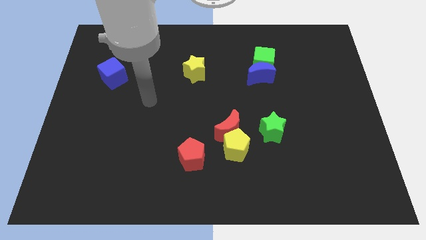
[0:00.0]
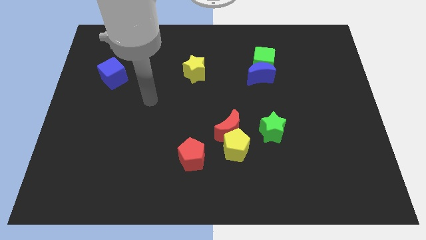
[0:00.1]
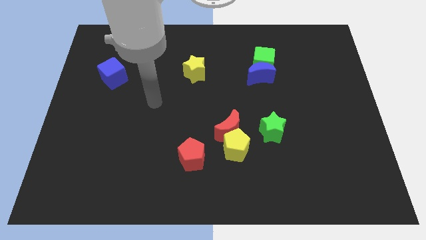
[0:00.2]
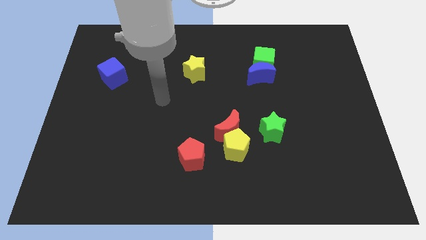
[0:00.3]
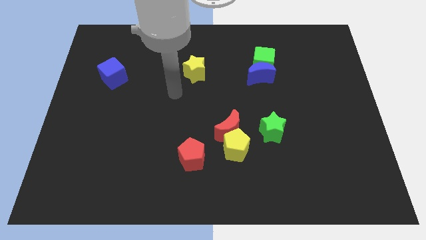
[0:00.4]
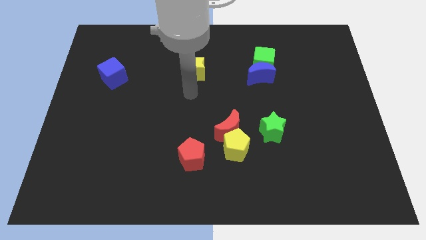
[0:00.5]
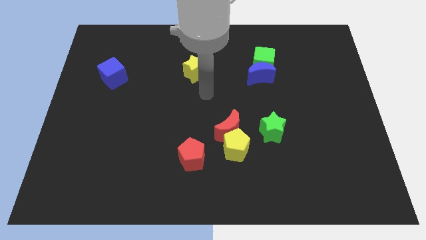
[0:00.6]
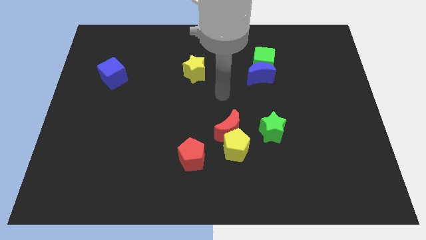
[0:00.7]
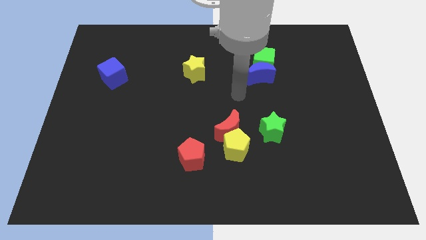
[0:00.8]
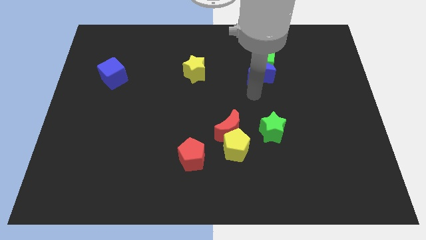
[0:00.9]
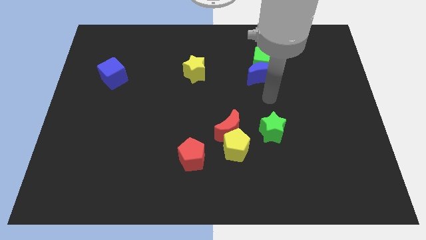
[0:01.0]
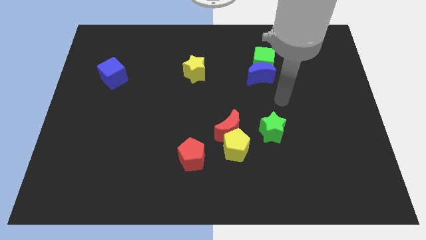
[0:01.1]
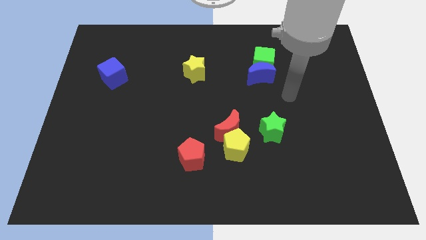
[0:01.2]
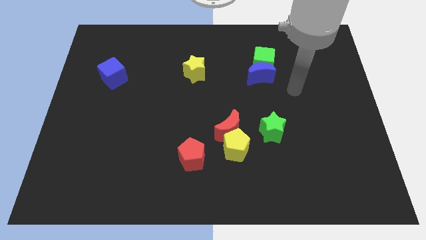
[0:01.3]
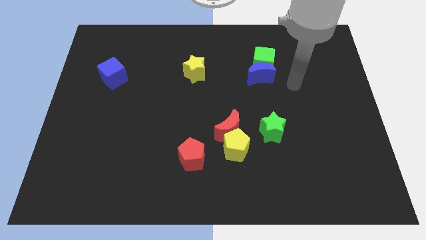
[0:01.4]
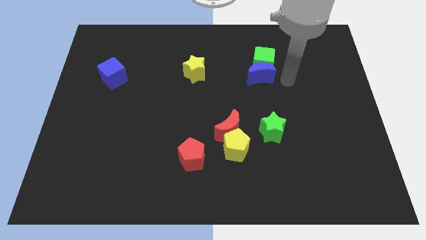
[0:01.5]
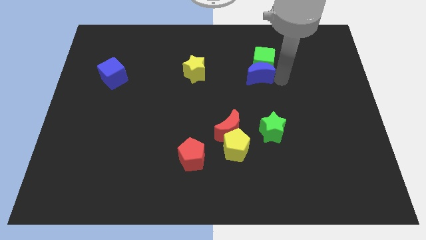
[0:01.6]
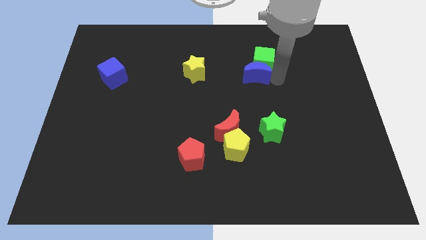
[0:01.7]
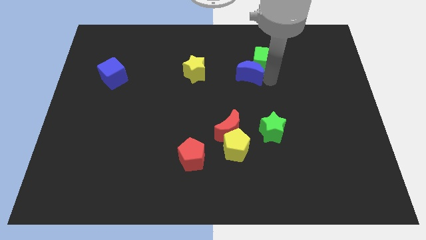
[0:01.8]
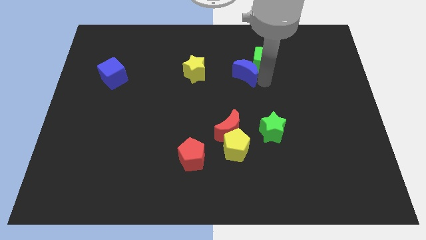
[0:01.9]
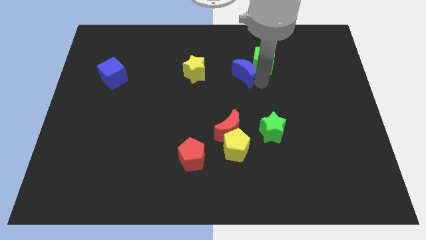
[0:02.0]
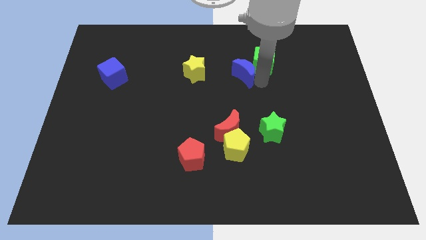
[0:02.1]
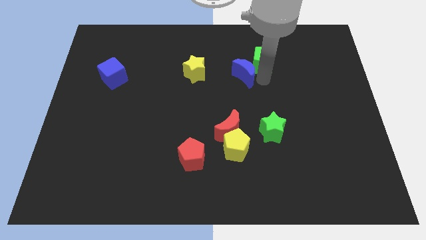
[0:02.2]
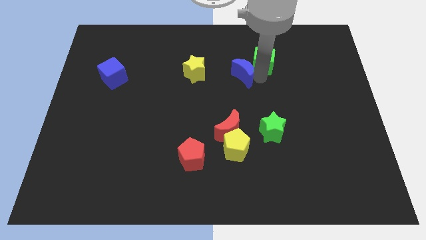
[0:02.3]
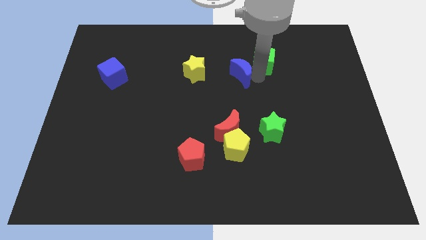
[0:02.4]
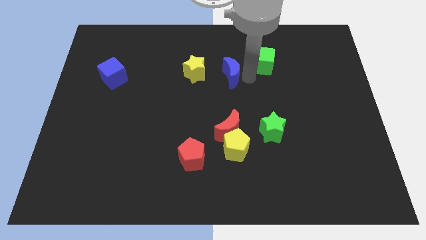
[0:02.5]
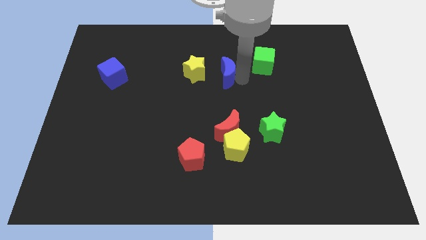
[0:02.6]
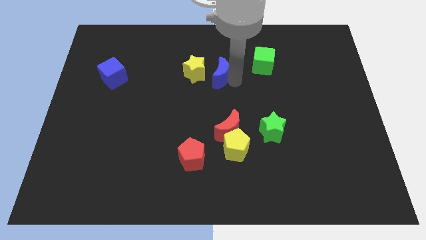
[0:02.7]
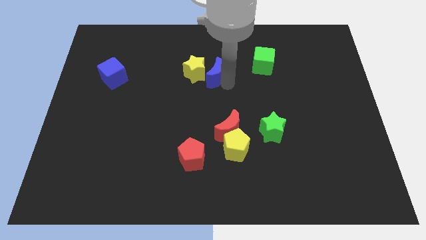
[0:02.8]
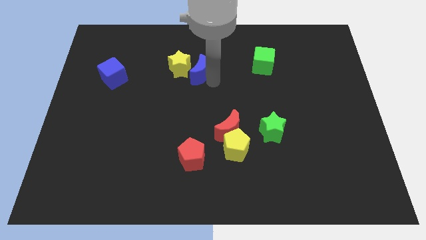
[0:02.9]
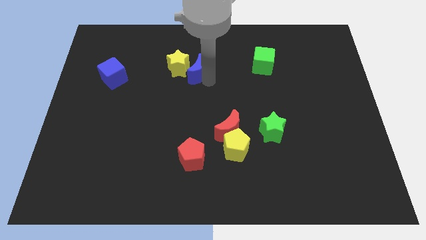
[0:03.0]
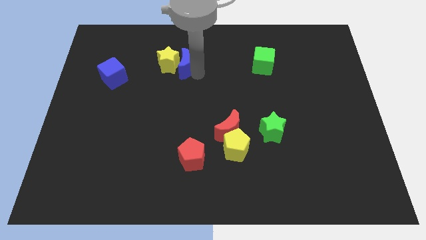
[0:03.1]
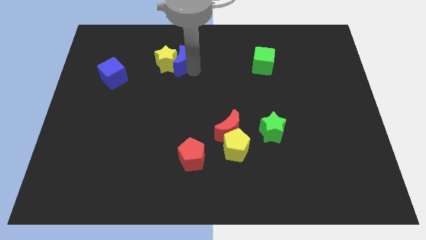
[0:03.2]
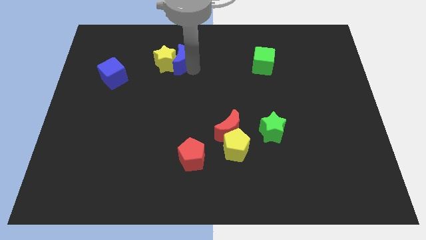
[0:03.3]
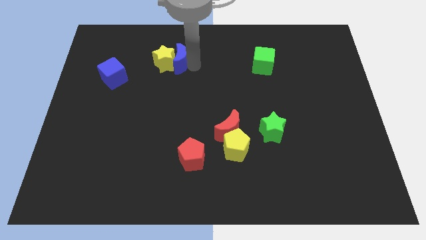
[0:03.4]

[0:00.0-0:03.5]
separate the blue crescent from the green cube

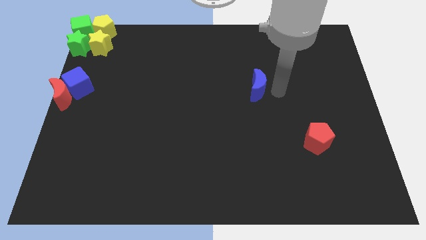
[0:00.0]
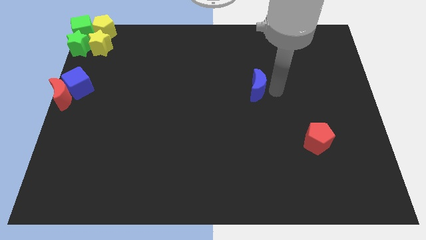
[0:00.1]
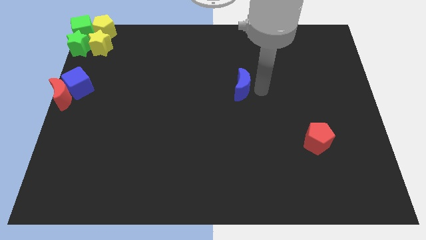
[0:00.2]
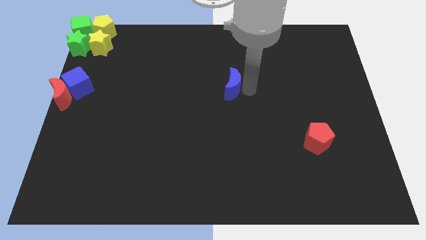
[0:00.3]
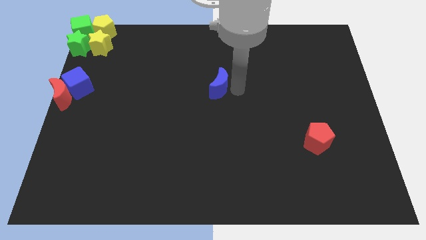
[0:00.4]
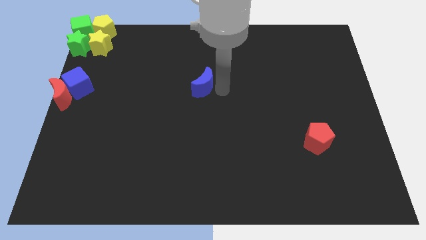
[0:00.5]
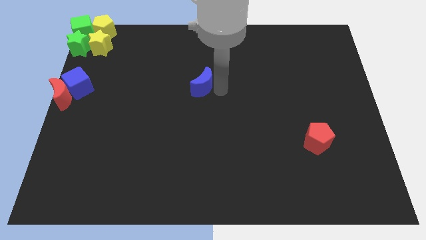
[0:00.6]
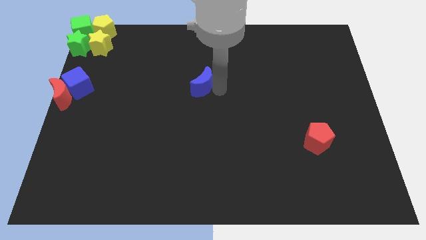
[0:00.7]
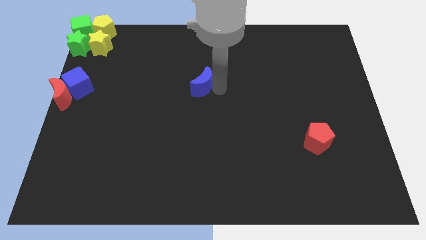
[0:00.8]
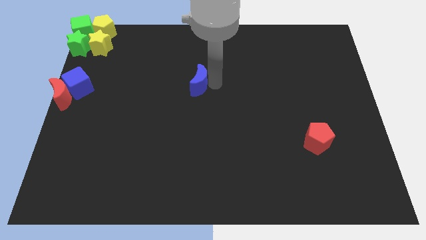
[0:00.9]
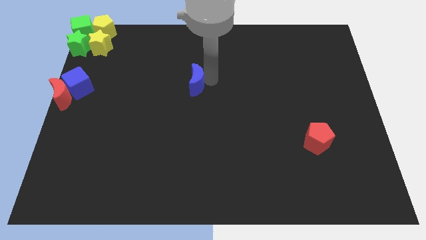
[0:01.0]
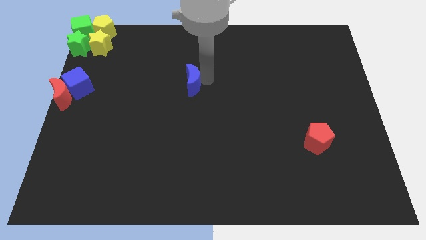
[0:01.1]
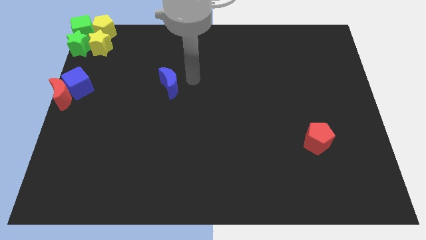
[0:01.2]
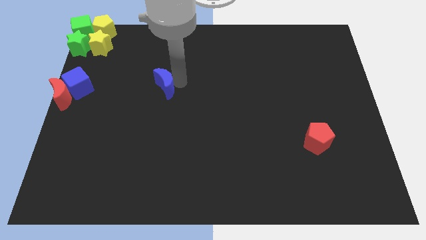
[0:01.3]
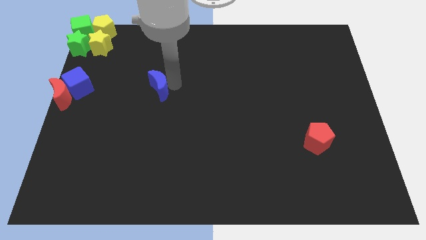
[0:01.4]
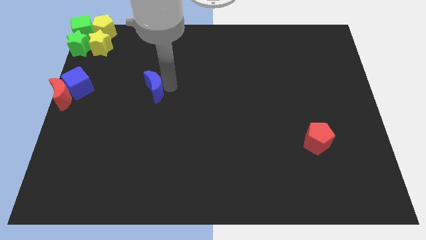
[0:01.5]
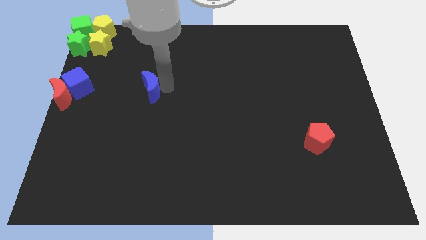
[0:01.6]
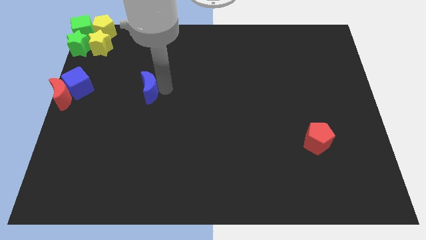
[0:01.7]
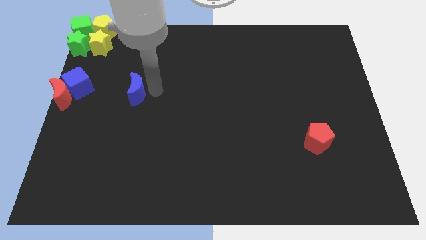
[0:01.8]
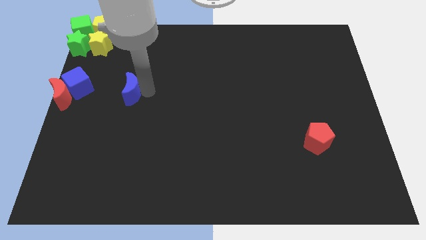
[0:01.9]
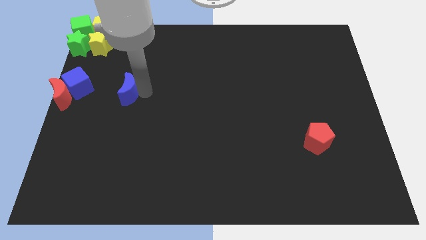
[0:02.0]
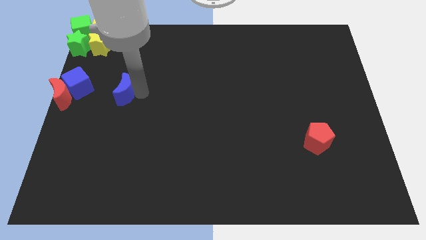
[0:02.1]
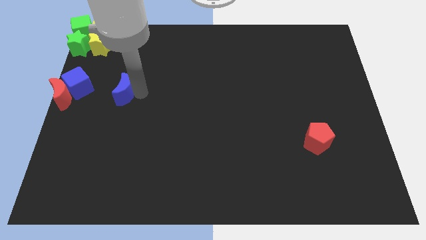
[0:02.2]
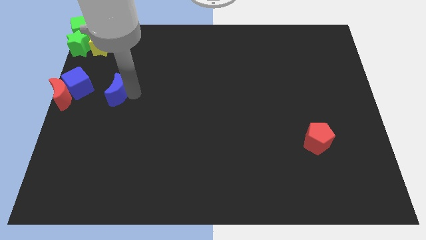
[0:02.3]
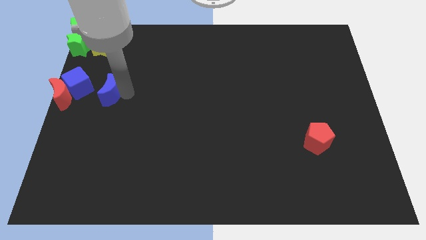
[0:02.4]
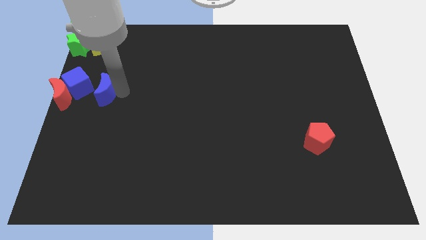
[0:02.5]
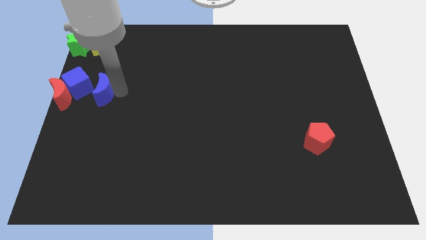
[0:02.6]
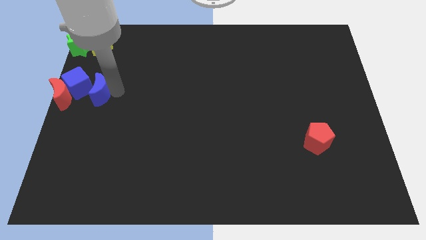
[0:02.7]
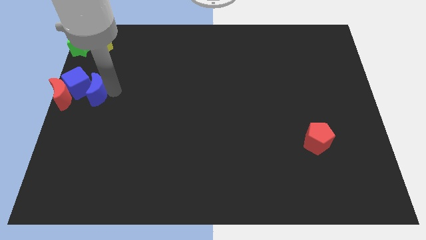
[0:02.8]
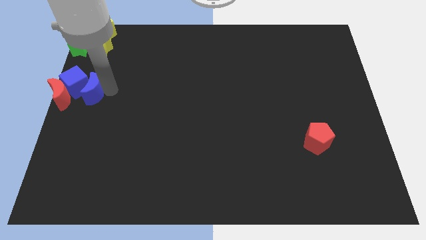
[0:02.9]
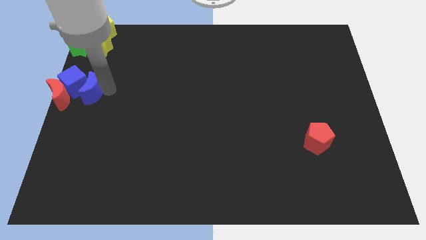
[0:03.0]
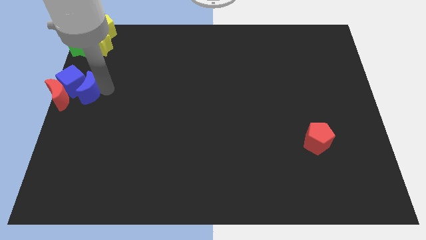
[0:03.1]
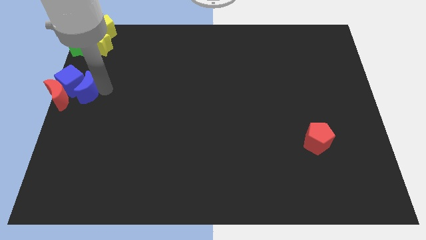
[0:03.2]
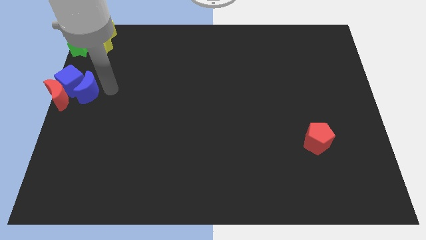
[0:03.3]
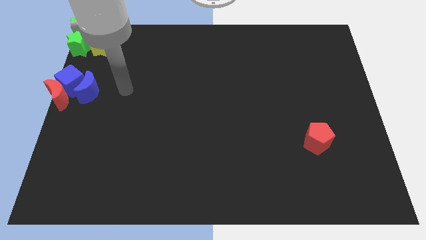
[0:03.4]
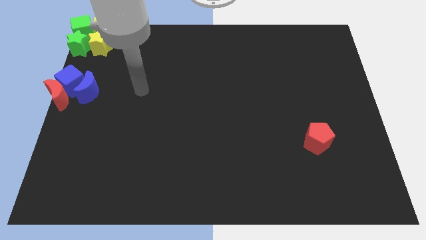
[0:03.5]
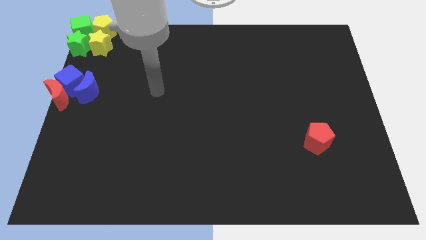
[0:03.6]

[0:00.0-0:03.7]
push blue crescent into blue cube

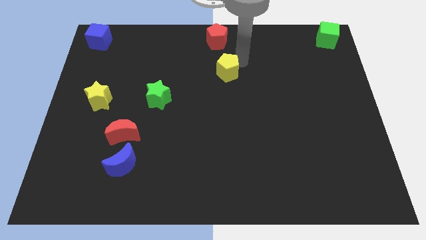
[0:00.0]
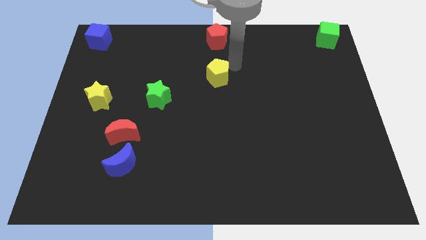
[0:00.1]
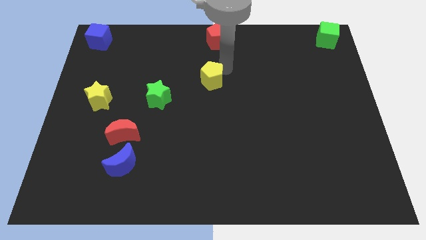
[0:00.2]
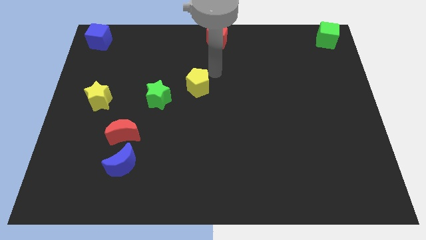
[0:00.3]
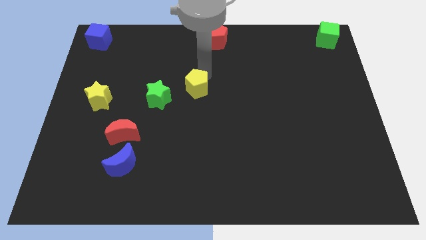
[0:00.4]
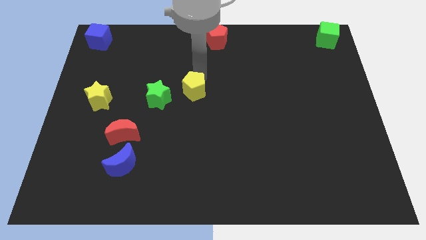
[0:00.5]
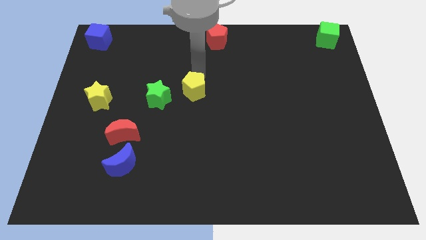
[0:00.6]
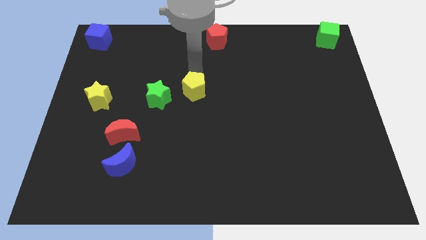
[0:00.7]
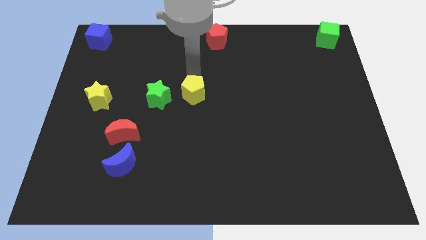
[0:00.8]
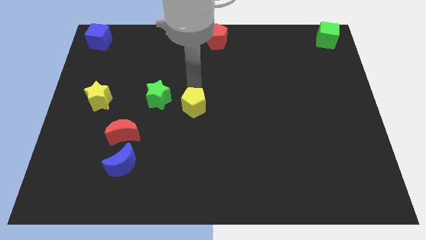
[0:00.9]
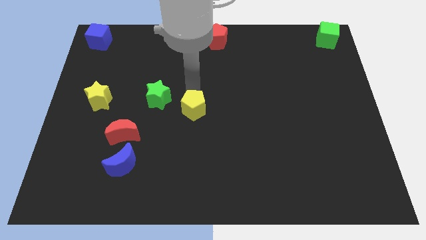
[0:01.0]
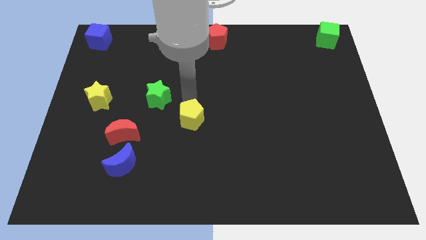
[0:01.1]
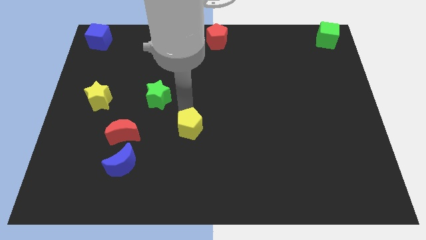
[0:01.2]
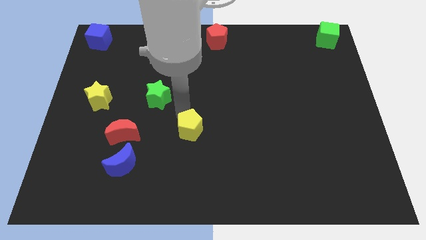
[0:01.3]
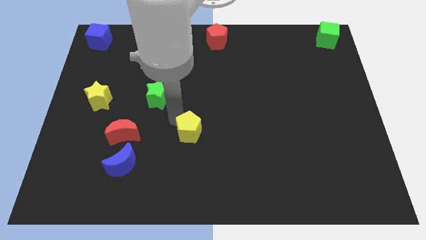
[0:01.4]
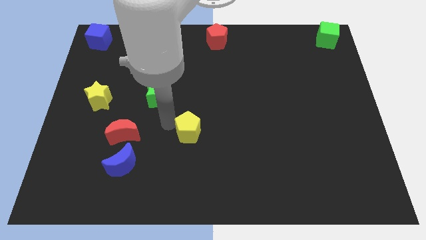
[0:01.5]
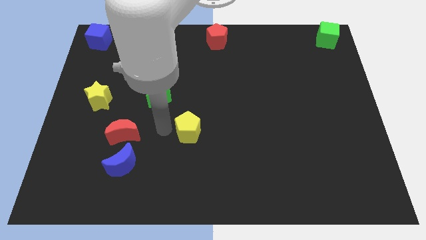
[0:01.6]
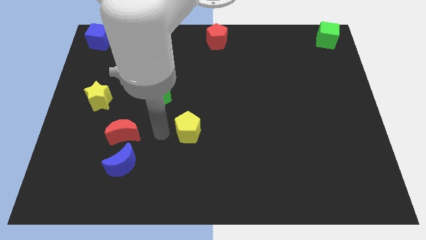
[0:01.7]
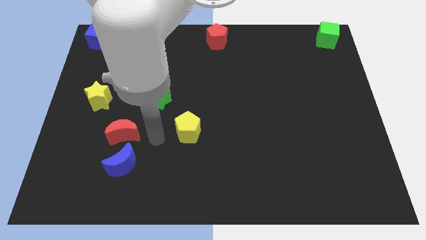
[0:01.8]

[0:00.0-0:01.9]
place yellow pentagon to the right of red moon
